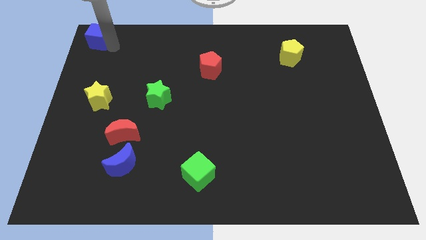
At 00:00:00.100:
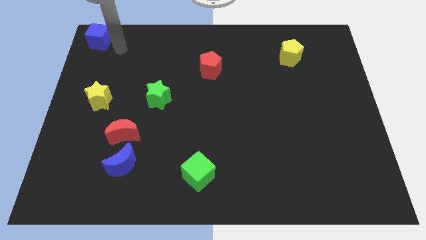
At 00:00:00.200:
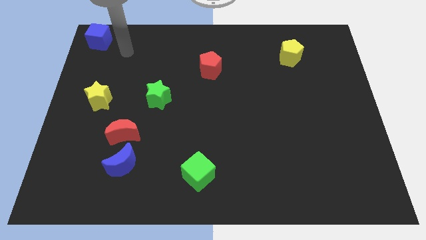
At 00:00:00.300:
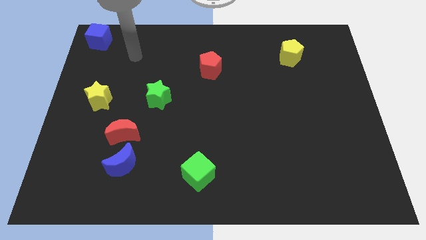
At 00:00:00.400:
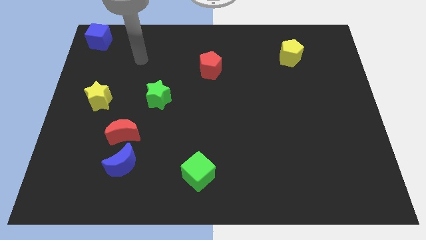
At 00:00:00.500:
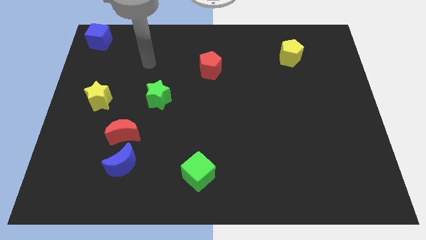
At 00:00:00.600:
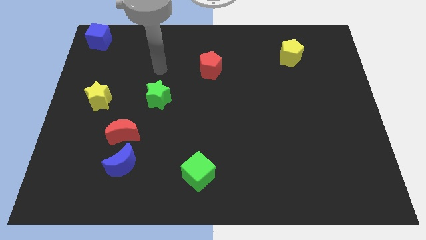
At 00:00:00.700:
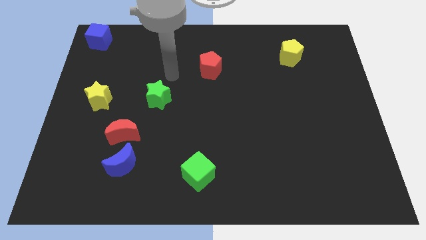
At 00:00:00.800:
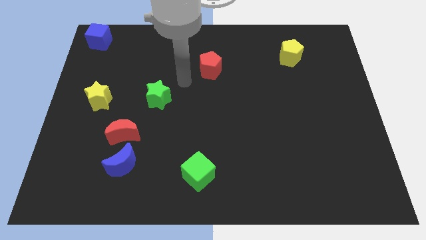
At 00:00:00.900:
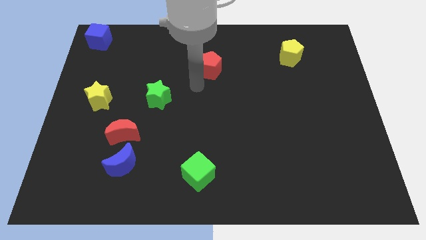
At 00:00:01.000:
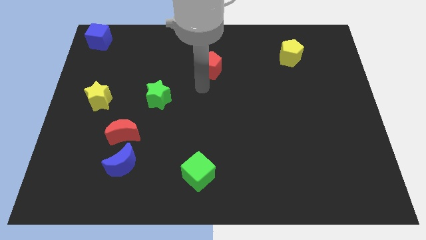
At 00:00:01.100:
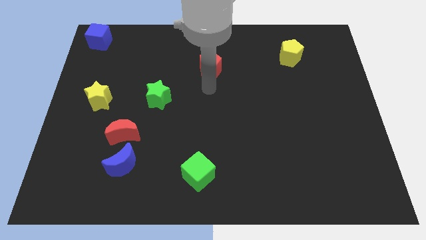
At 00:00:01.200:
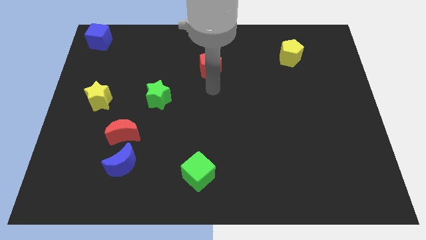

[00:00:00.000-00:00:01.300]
place your arm to the bottom of red pentagon

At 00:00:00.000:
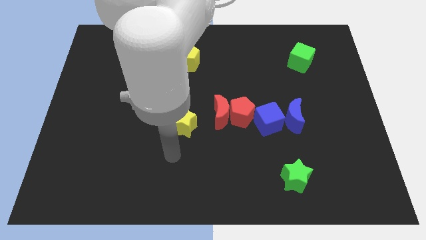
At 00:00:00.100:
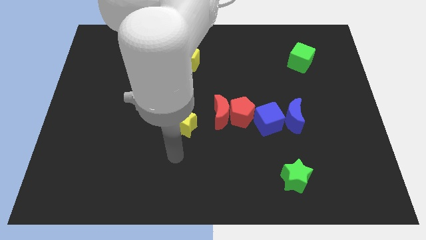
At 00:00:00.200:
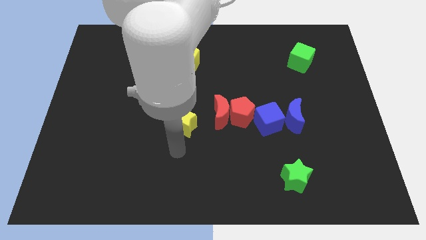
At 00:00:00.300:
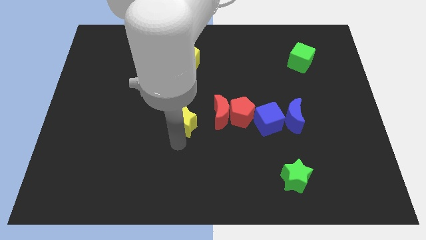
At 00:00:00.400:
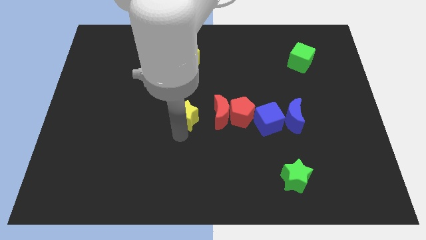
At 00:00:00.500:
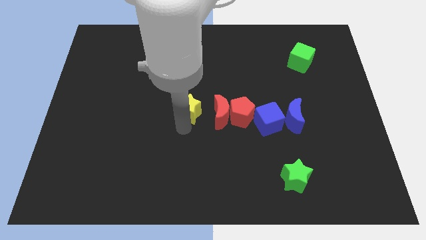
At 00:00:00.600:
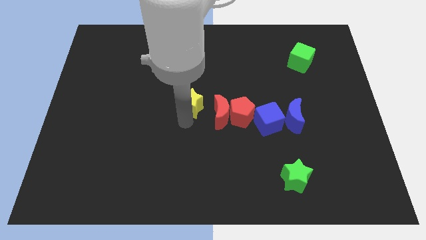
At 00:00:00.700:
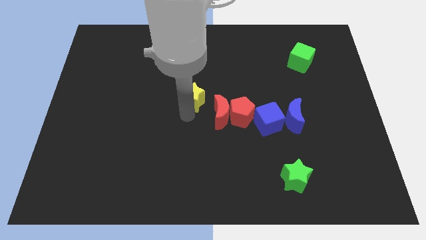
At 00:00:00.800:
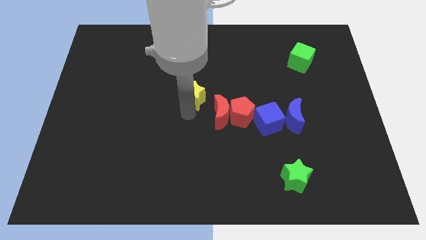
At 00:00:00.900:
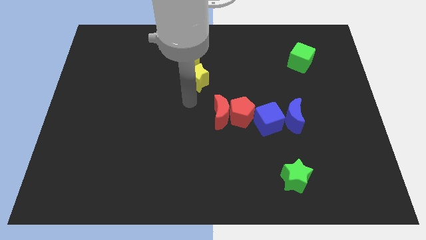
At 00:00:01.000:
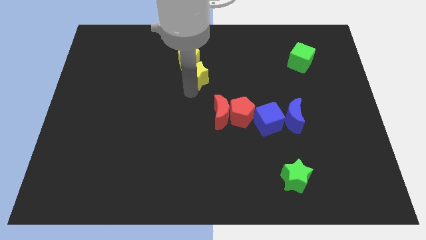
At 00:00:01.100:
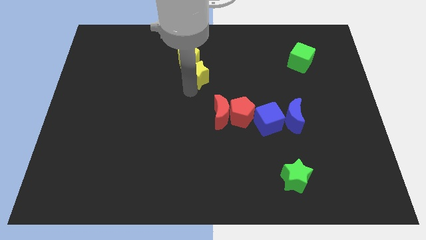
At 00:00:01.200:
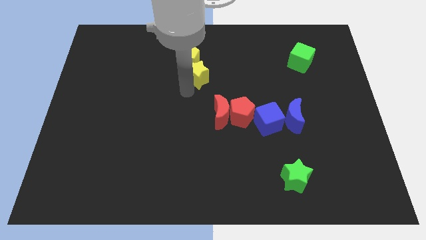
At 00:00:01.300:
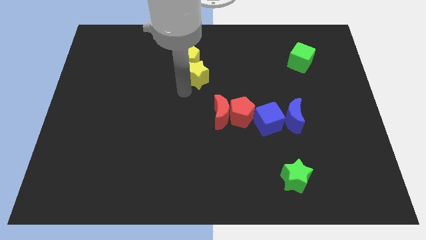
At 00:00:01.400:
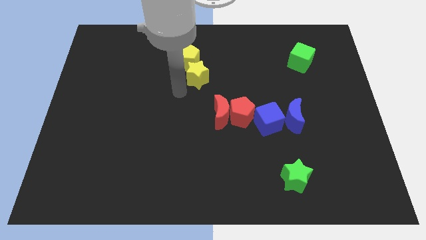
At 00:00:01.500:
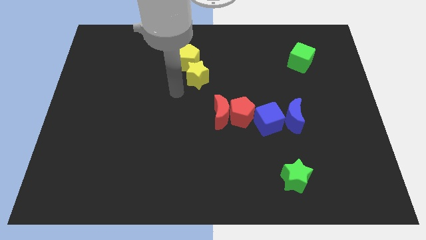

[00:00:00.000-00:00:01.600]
move the yellow star to the bottom right side of the yellow pentagon

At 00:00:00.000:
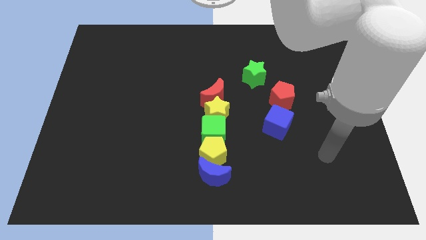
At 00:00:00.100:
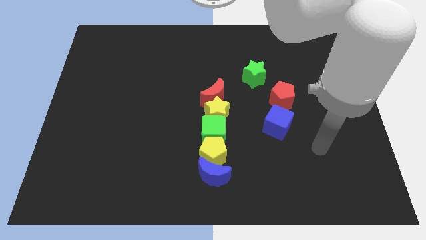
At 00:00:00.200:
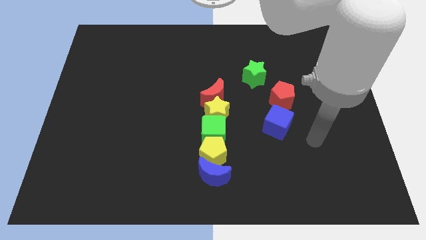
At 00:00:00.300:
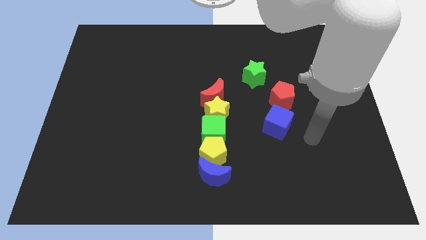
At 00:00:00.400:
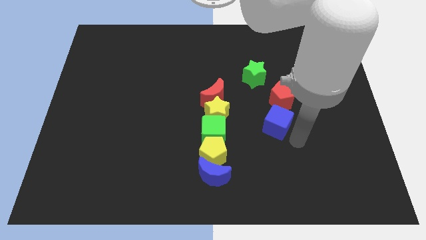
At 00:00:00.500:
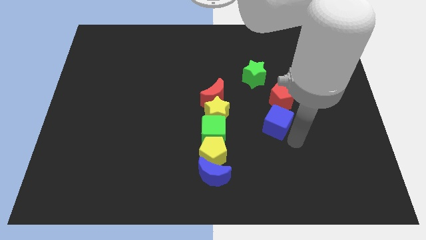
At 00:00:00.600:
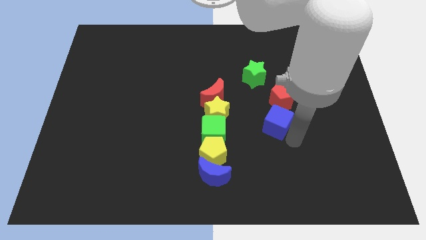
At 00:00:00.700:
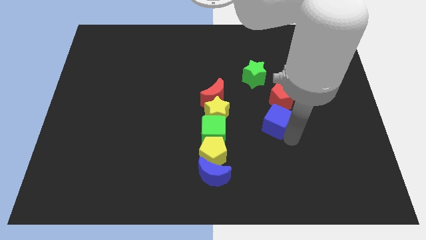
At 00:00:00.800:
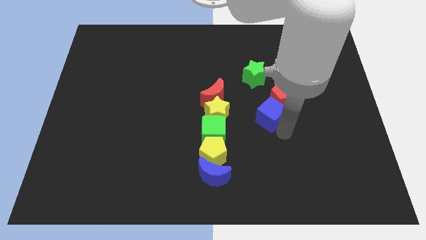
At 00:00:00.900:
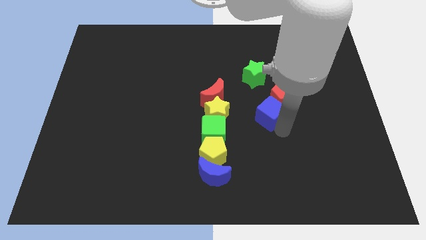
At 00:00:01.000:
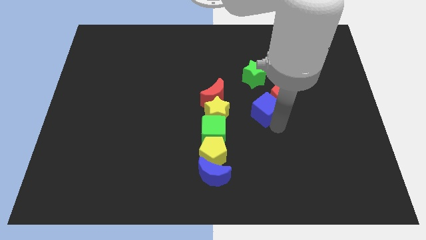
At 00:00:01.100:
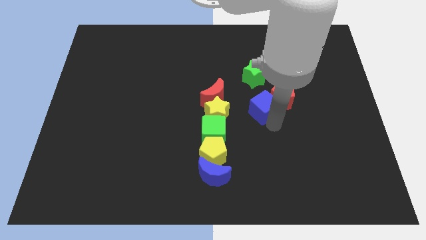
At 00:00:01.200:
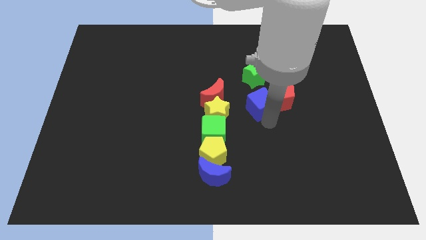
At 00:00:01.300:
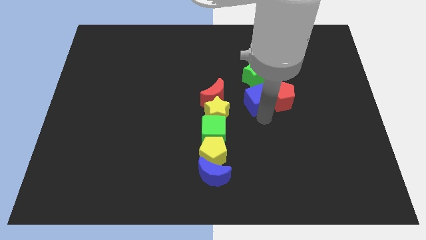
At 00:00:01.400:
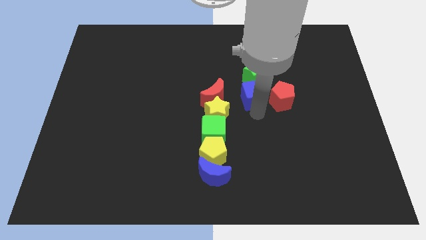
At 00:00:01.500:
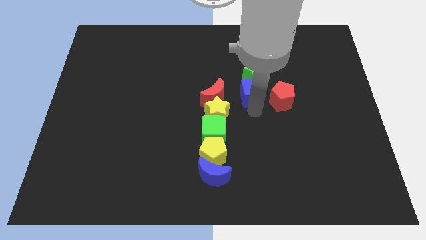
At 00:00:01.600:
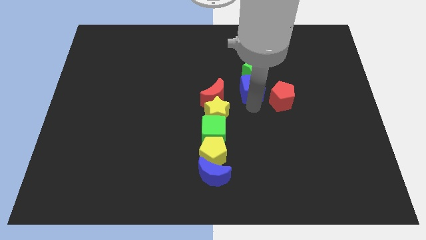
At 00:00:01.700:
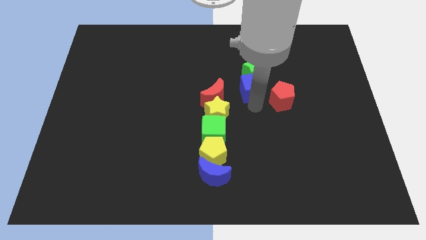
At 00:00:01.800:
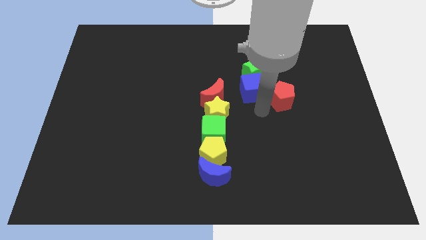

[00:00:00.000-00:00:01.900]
move the blue cube into the green star

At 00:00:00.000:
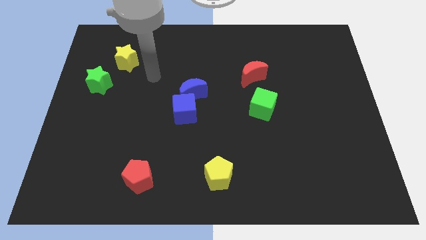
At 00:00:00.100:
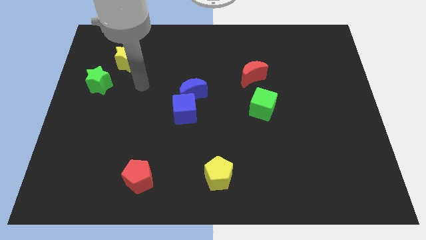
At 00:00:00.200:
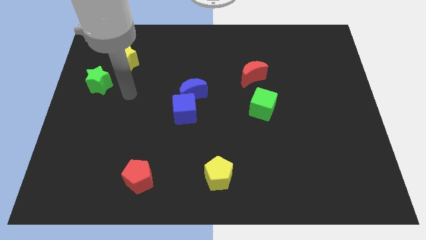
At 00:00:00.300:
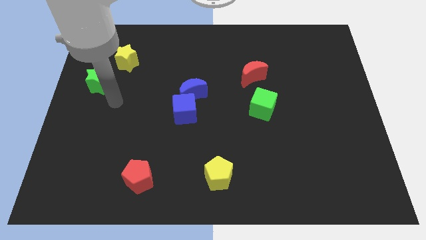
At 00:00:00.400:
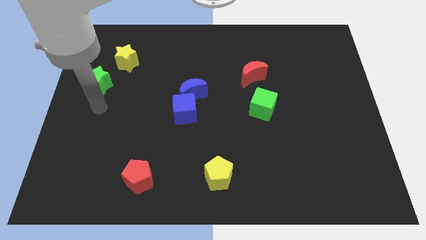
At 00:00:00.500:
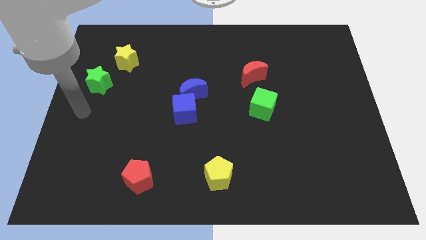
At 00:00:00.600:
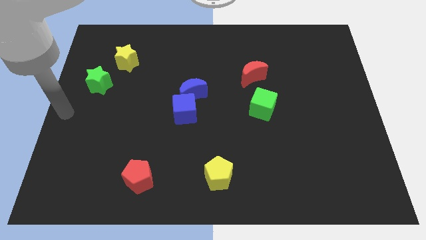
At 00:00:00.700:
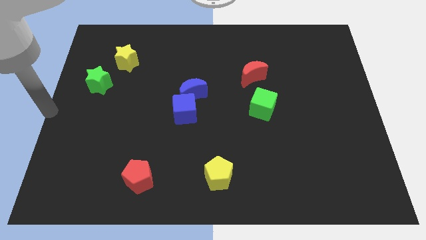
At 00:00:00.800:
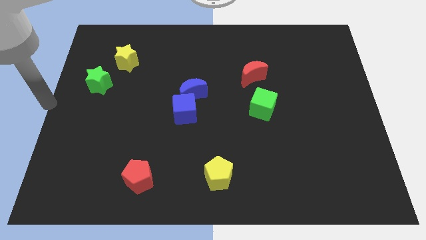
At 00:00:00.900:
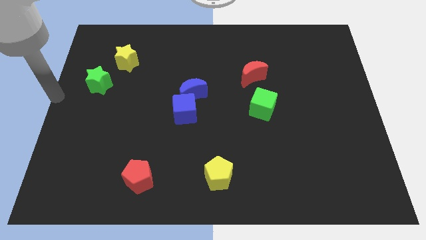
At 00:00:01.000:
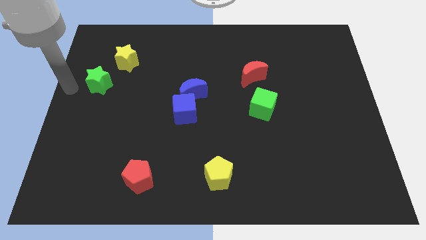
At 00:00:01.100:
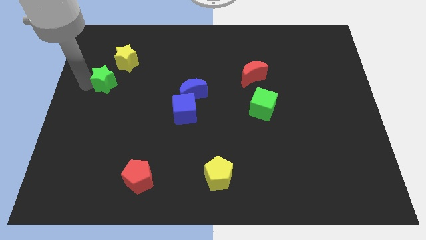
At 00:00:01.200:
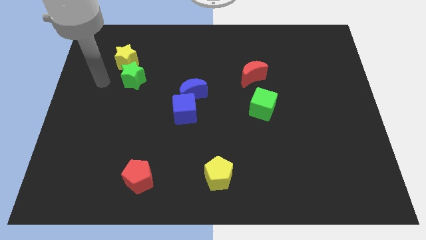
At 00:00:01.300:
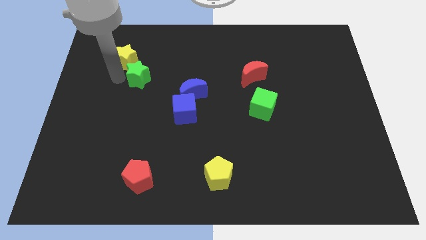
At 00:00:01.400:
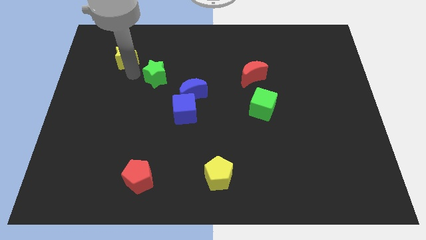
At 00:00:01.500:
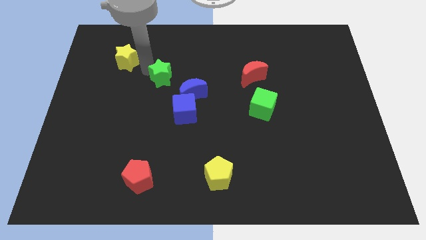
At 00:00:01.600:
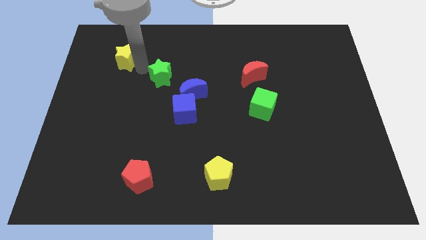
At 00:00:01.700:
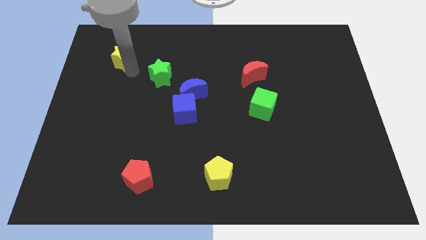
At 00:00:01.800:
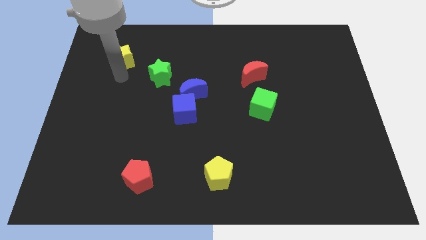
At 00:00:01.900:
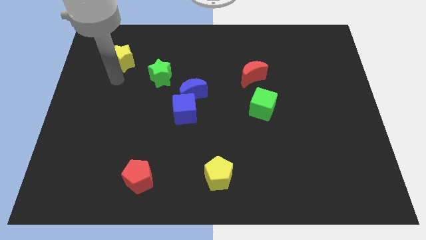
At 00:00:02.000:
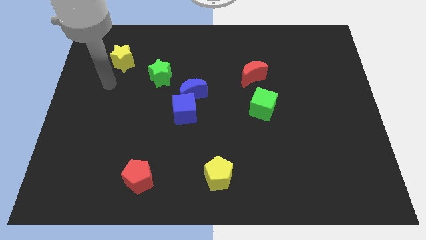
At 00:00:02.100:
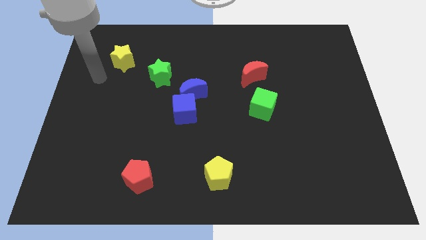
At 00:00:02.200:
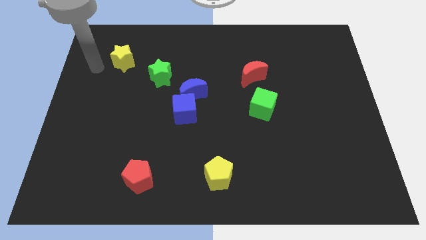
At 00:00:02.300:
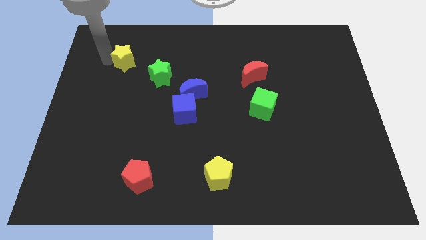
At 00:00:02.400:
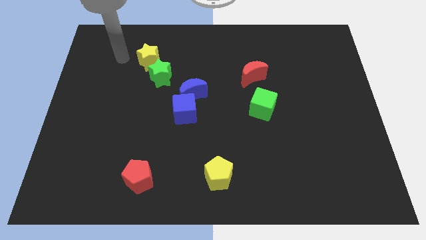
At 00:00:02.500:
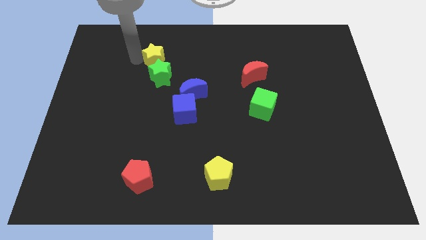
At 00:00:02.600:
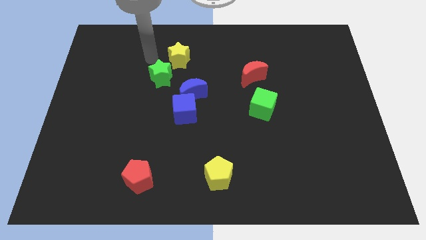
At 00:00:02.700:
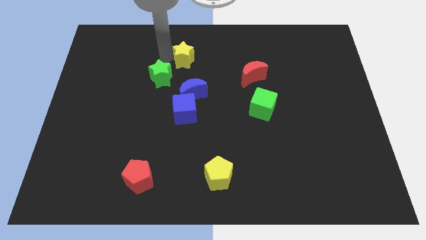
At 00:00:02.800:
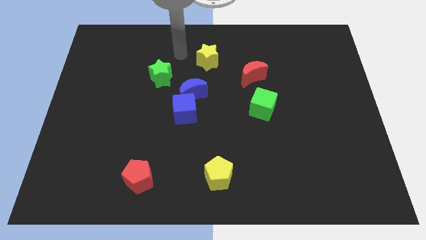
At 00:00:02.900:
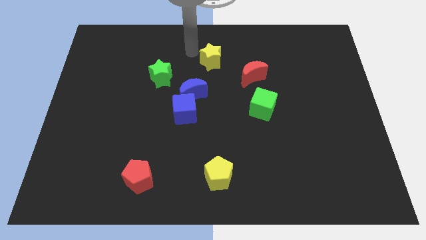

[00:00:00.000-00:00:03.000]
move yellow pentagon to right

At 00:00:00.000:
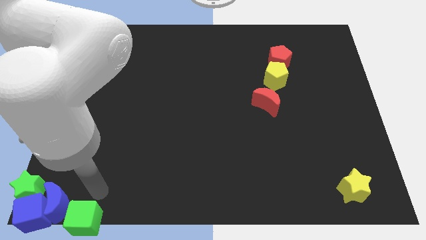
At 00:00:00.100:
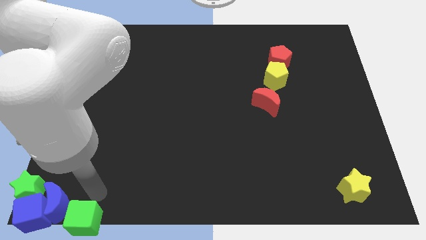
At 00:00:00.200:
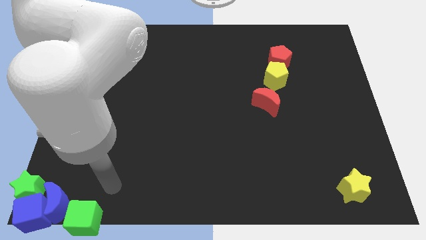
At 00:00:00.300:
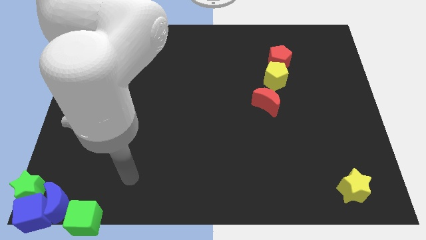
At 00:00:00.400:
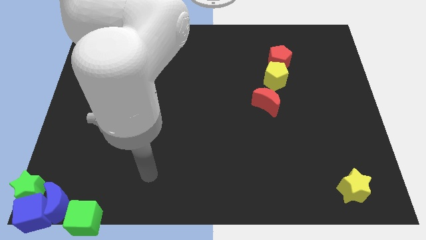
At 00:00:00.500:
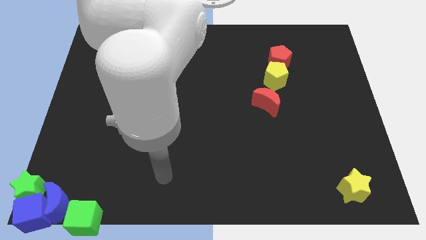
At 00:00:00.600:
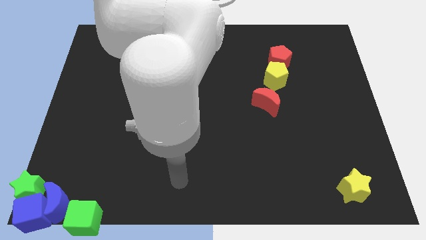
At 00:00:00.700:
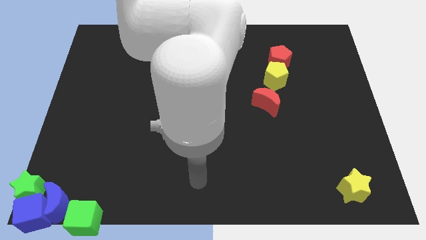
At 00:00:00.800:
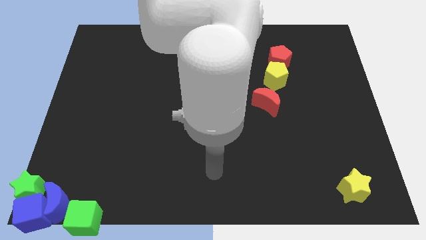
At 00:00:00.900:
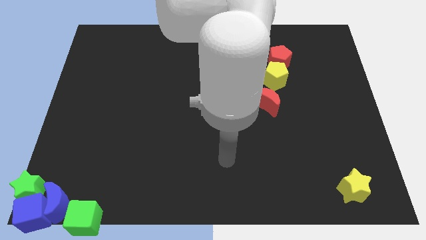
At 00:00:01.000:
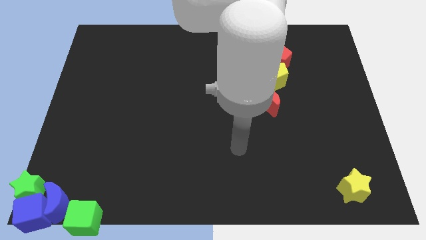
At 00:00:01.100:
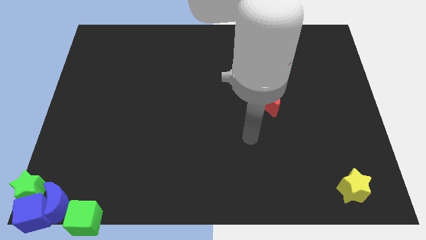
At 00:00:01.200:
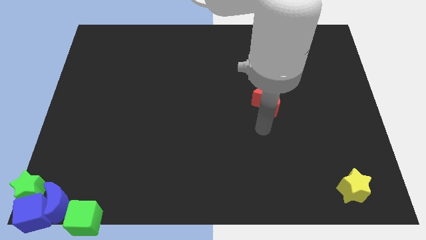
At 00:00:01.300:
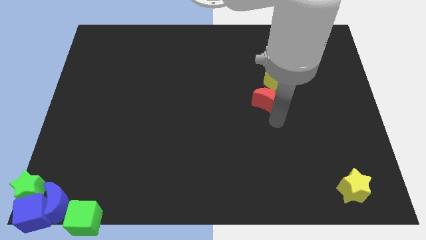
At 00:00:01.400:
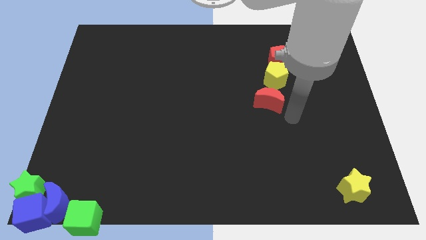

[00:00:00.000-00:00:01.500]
go away from the green cube
